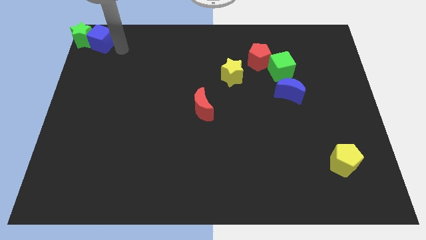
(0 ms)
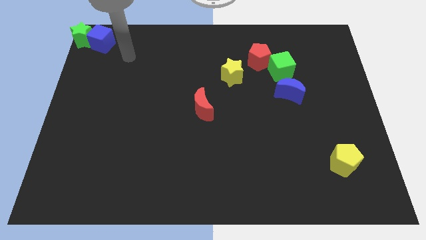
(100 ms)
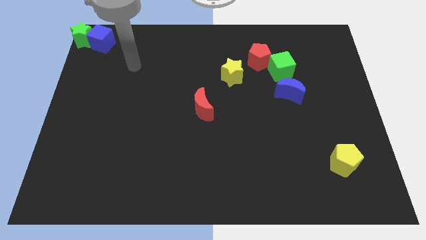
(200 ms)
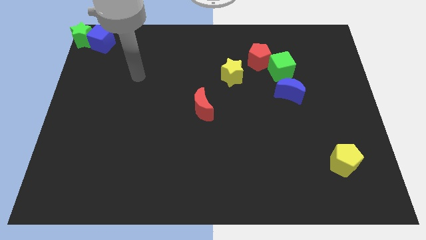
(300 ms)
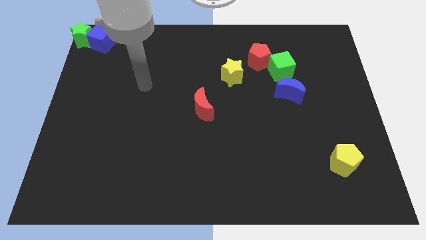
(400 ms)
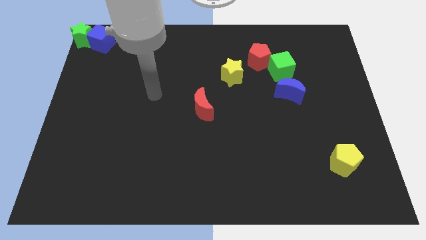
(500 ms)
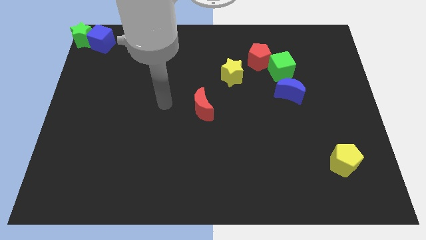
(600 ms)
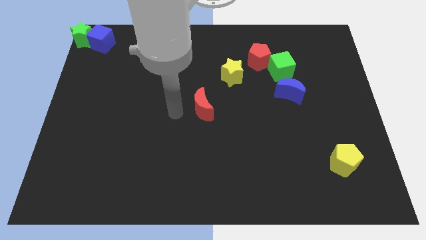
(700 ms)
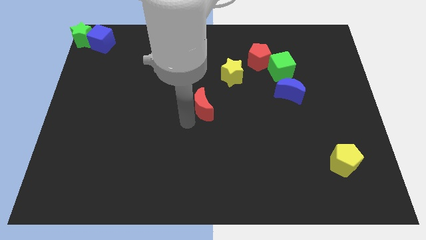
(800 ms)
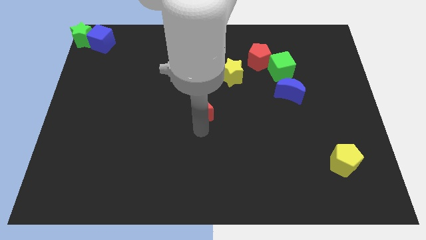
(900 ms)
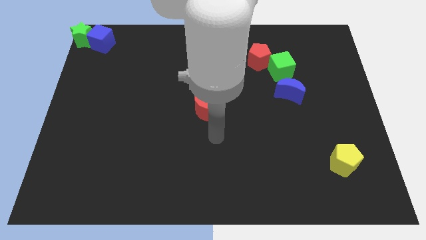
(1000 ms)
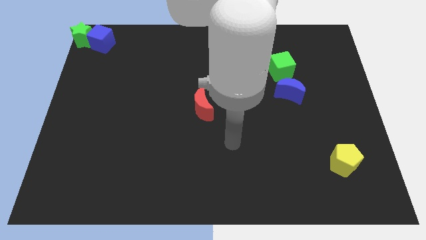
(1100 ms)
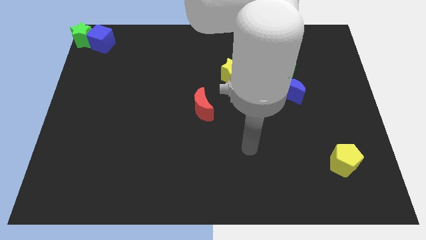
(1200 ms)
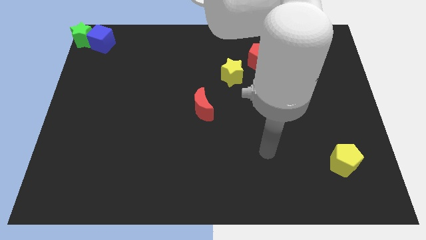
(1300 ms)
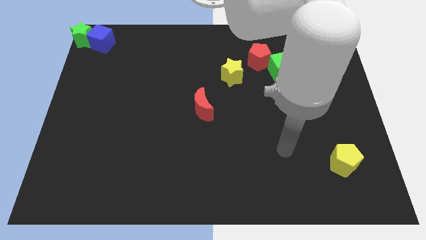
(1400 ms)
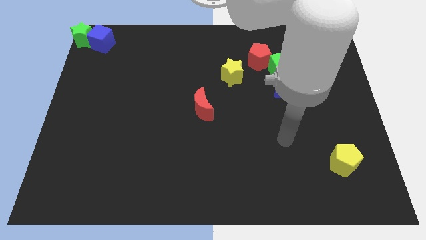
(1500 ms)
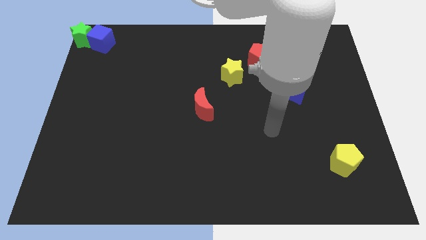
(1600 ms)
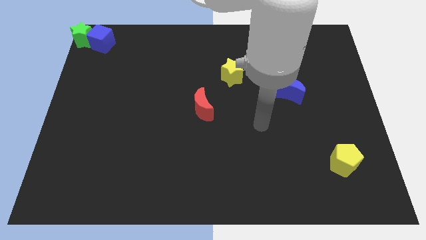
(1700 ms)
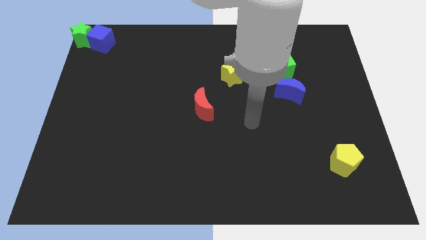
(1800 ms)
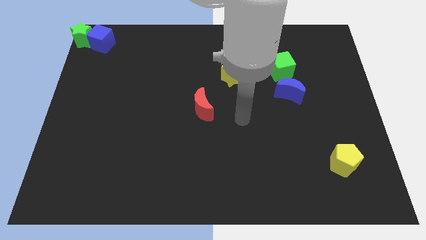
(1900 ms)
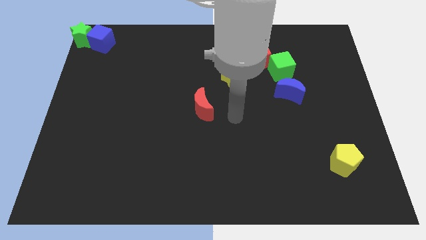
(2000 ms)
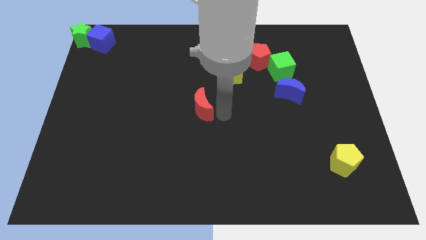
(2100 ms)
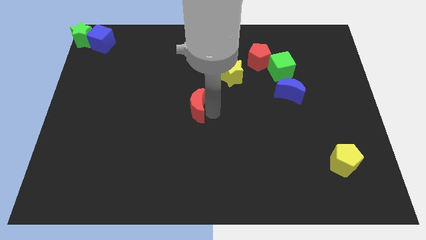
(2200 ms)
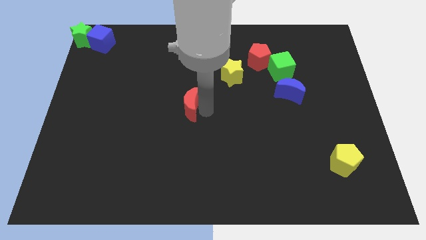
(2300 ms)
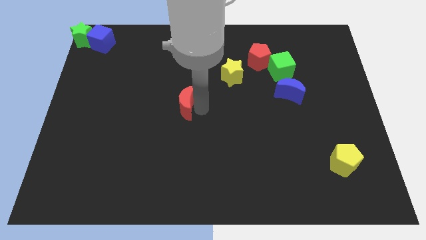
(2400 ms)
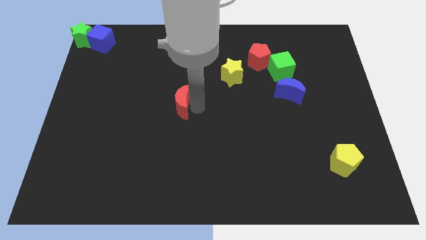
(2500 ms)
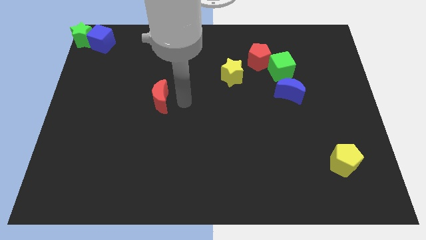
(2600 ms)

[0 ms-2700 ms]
move your arm to the right of the red moon

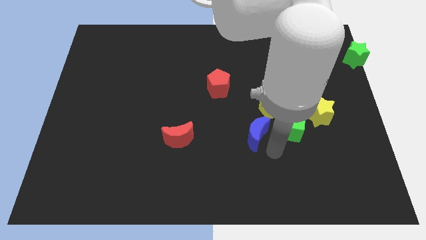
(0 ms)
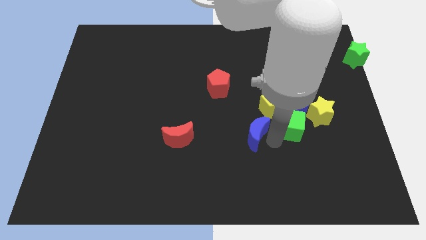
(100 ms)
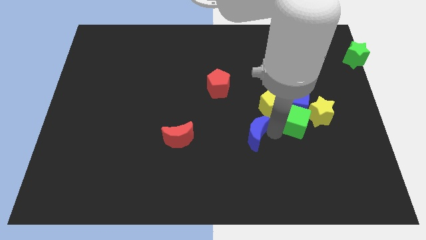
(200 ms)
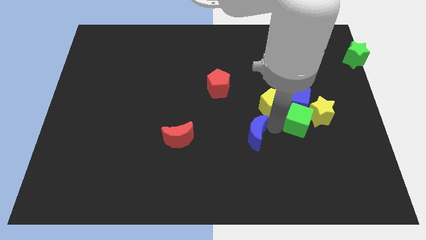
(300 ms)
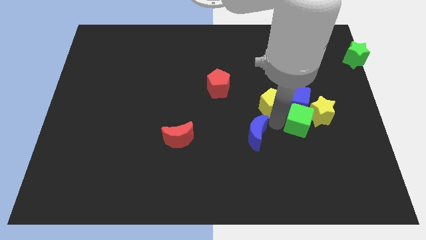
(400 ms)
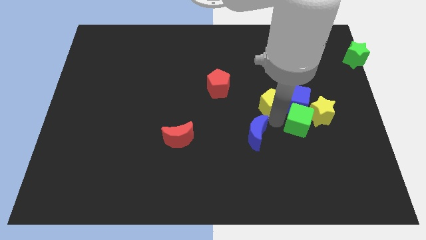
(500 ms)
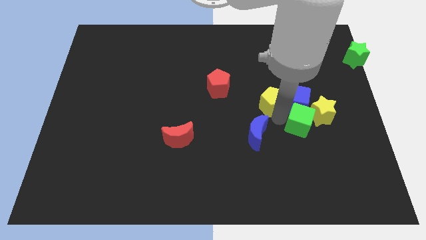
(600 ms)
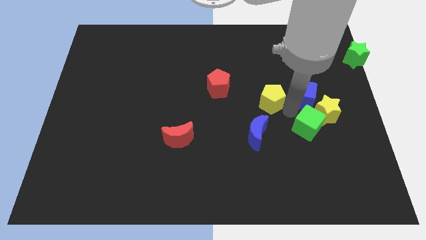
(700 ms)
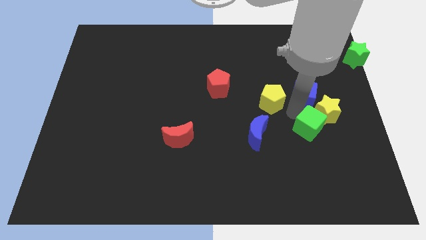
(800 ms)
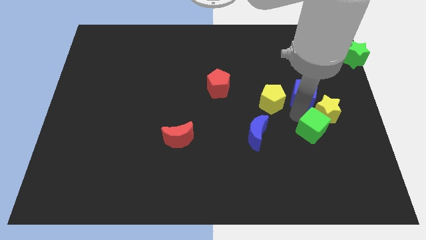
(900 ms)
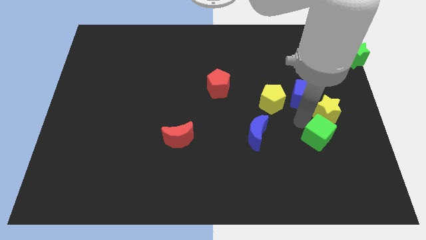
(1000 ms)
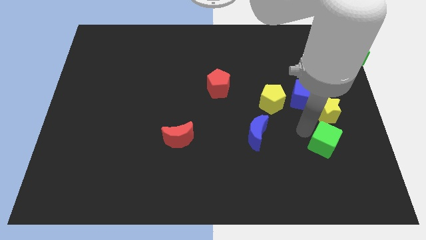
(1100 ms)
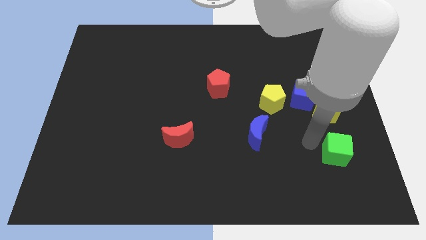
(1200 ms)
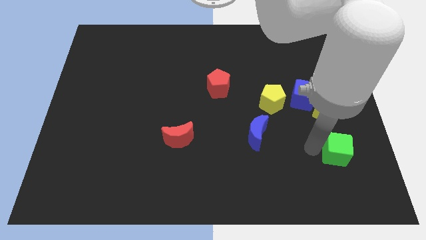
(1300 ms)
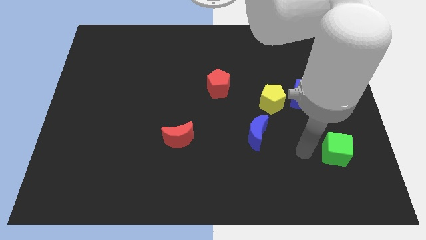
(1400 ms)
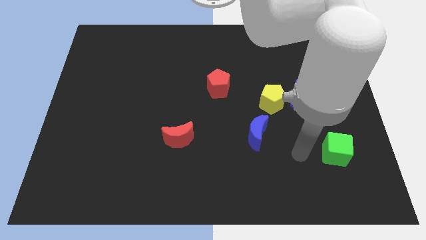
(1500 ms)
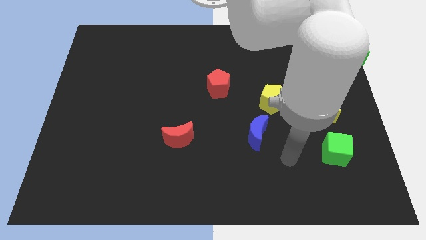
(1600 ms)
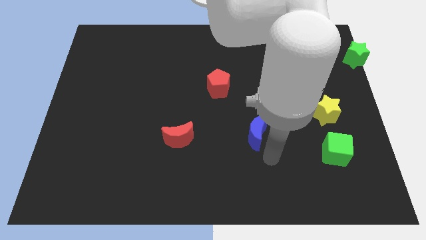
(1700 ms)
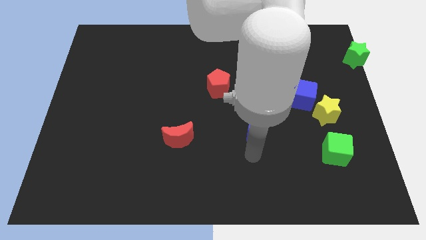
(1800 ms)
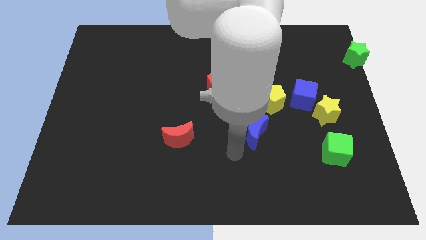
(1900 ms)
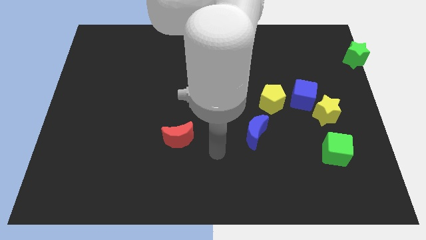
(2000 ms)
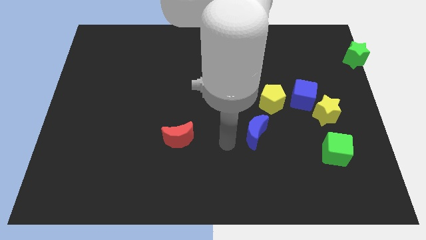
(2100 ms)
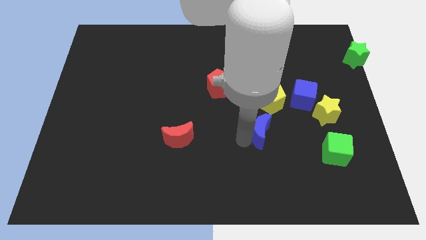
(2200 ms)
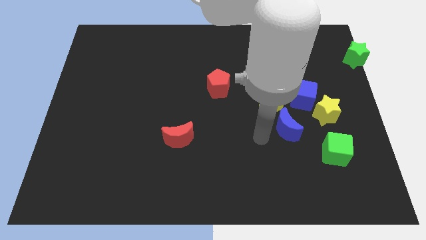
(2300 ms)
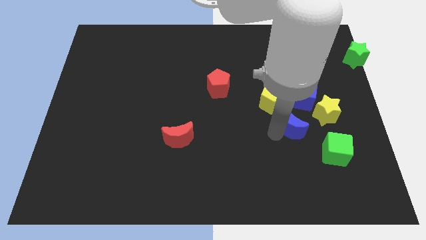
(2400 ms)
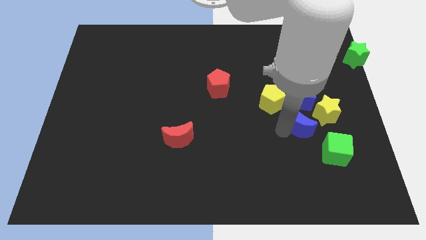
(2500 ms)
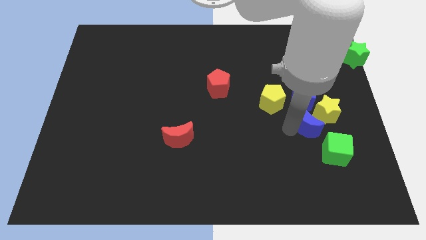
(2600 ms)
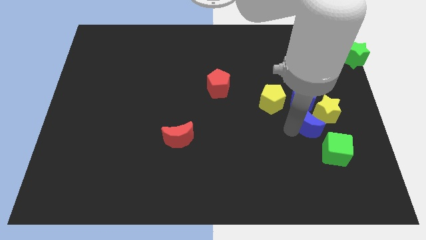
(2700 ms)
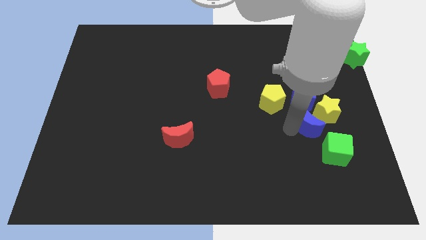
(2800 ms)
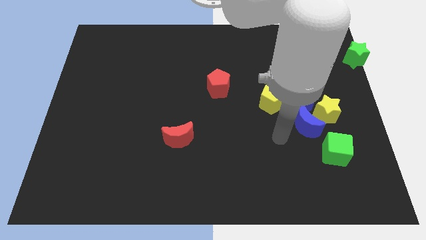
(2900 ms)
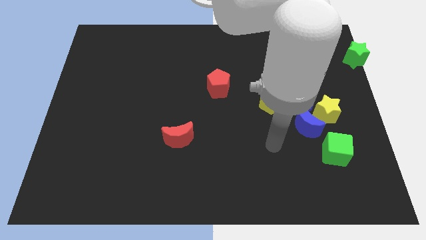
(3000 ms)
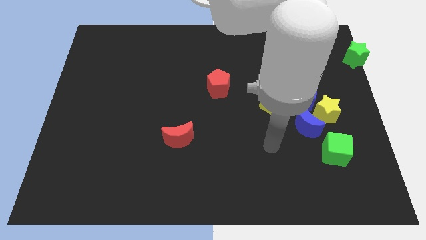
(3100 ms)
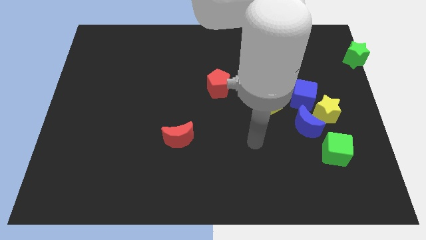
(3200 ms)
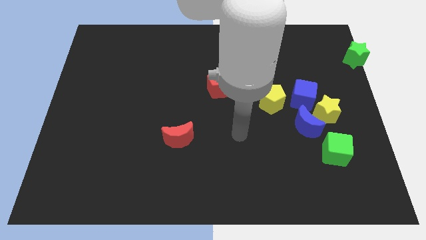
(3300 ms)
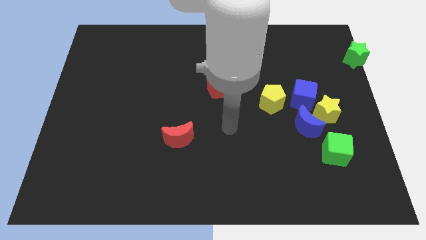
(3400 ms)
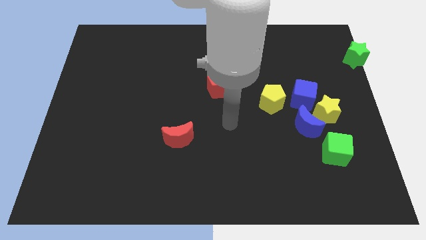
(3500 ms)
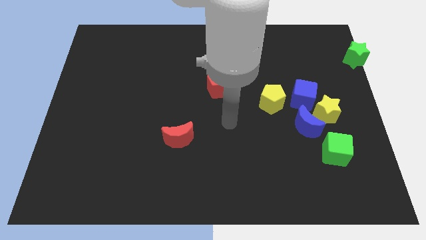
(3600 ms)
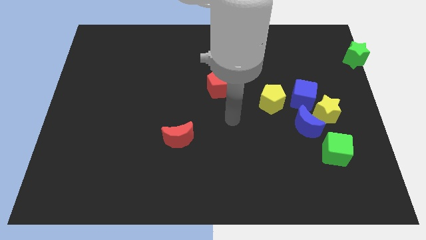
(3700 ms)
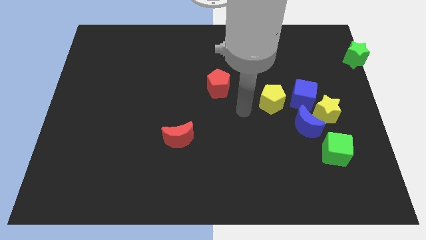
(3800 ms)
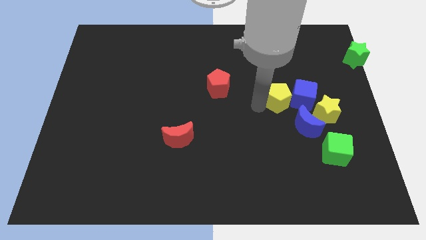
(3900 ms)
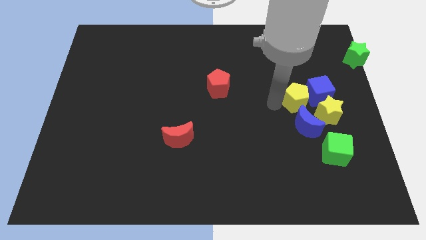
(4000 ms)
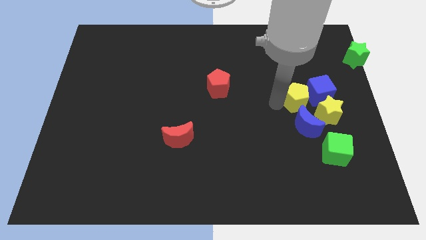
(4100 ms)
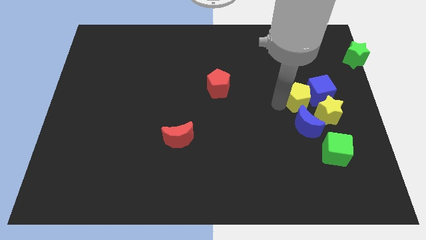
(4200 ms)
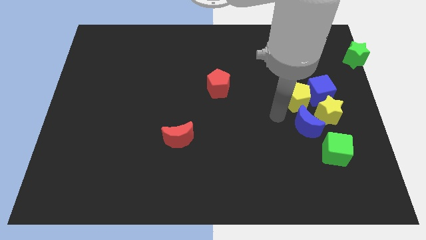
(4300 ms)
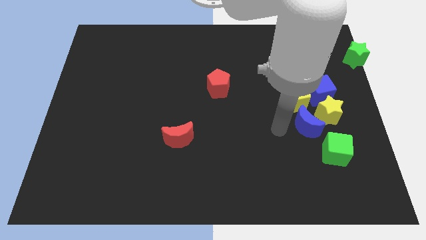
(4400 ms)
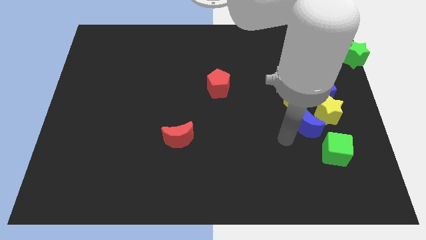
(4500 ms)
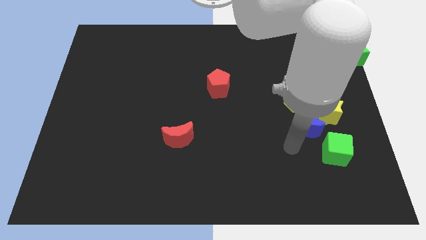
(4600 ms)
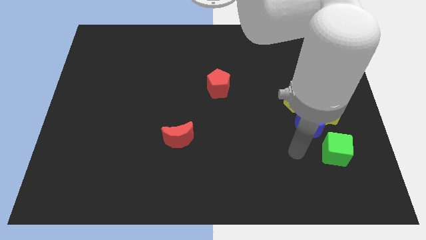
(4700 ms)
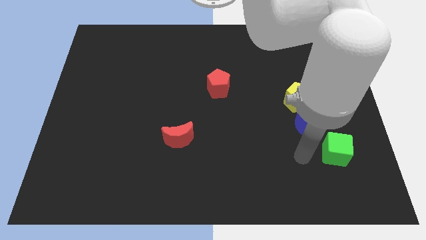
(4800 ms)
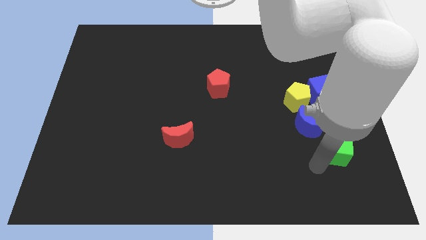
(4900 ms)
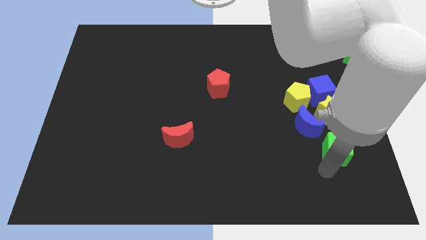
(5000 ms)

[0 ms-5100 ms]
push a group of blocks to the right side of the board

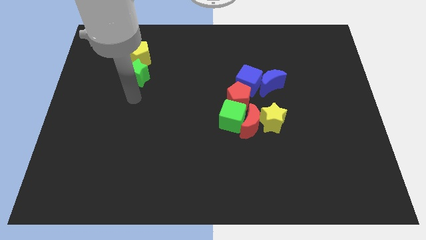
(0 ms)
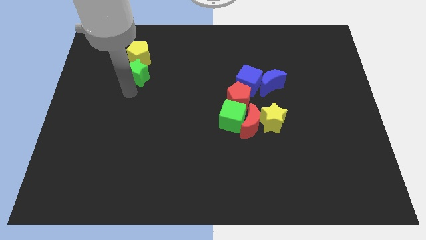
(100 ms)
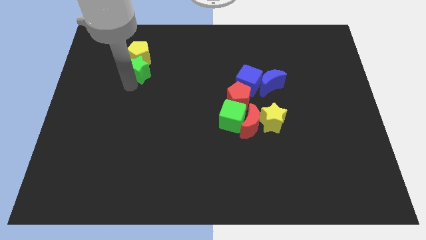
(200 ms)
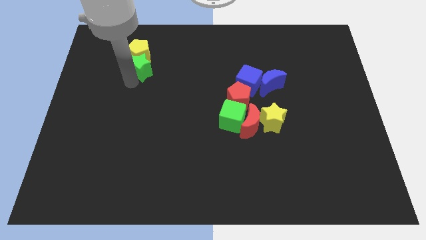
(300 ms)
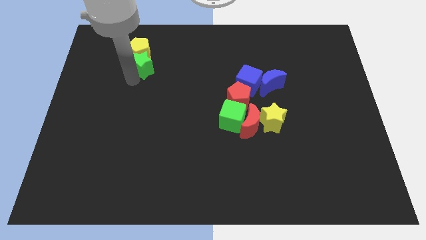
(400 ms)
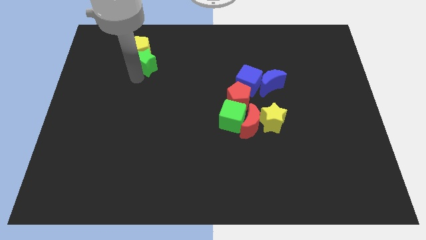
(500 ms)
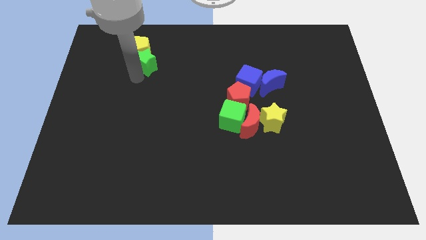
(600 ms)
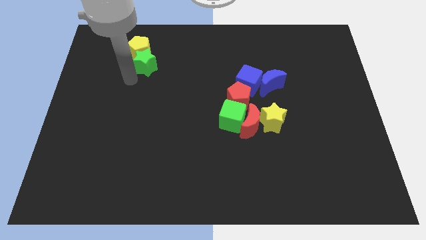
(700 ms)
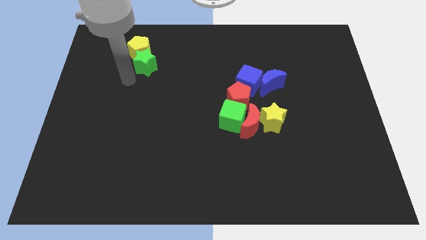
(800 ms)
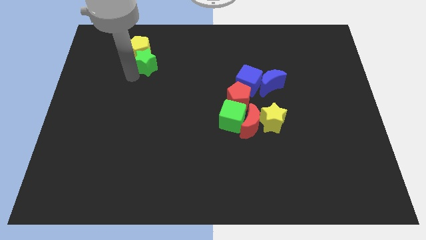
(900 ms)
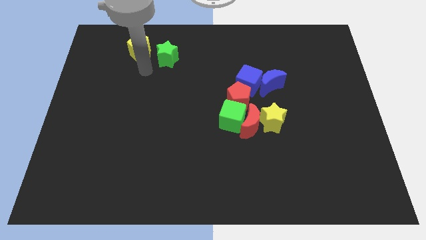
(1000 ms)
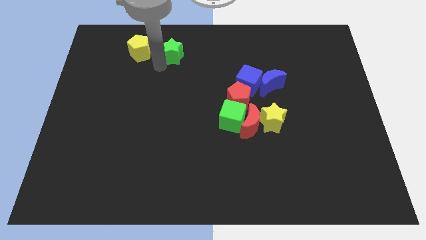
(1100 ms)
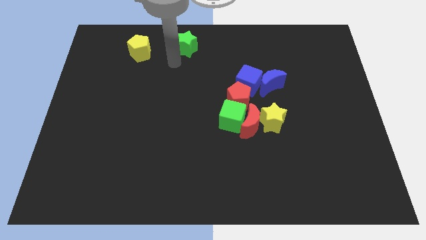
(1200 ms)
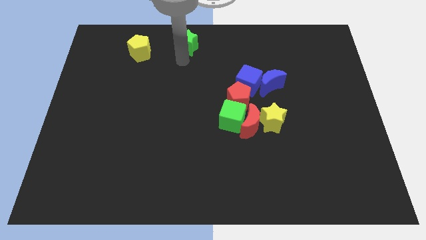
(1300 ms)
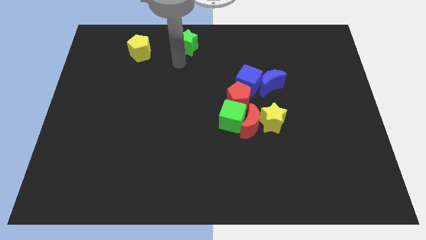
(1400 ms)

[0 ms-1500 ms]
separate the green star from the yellow star
